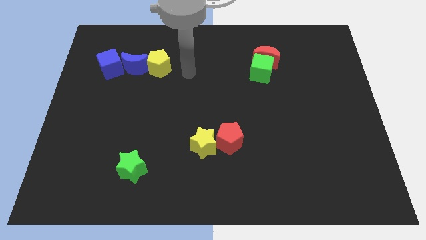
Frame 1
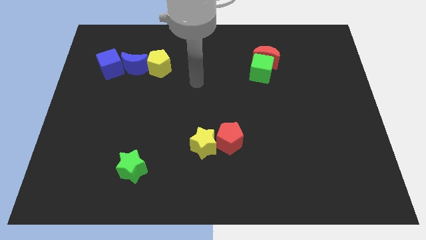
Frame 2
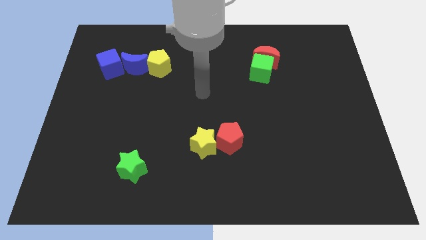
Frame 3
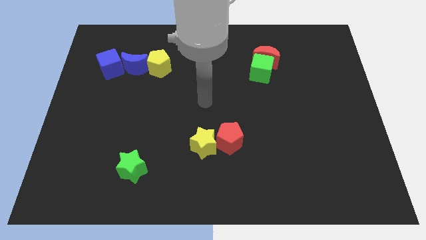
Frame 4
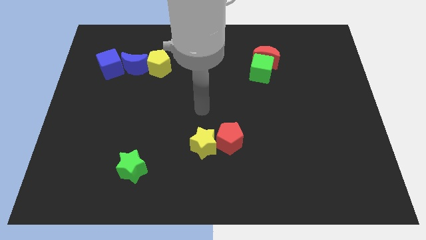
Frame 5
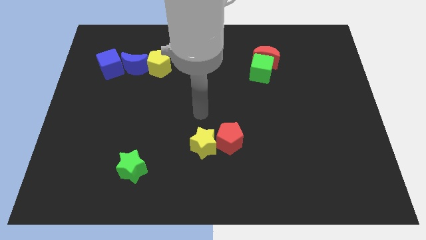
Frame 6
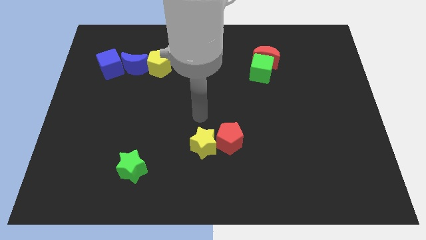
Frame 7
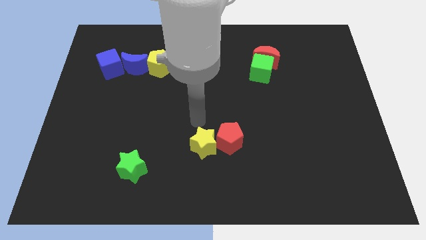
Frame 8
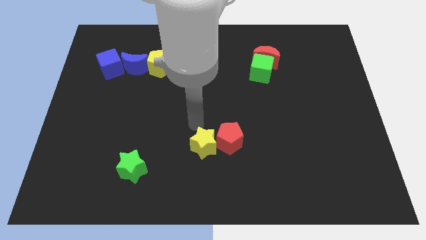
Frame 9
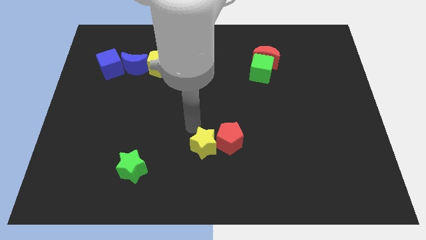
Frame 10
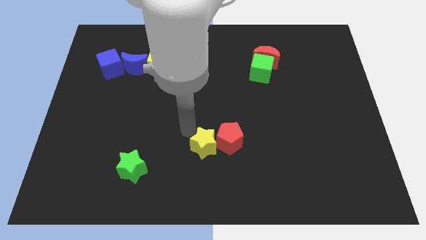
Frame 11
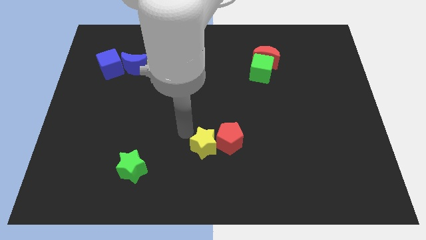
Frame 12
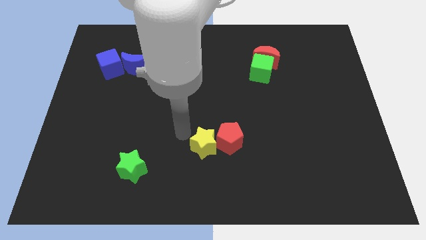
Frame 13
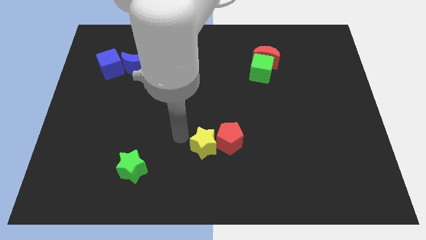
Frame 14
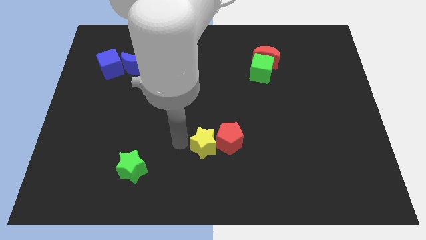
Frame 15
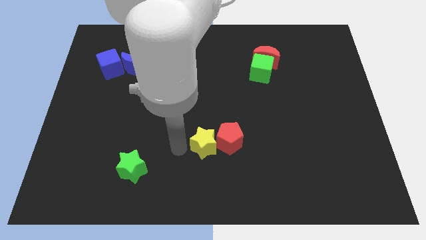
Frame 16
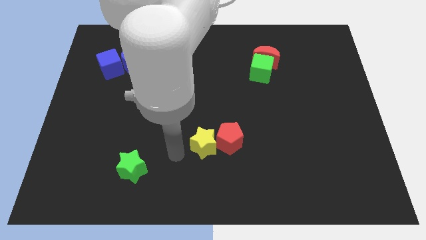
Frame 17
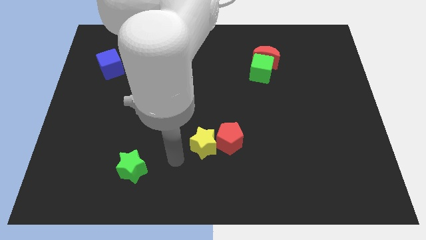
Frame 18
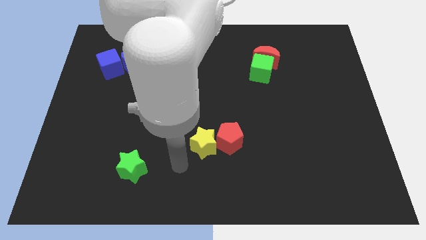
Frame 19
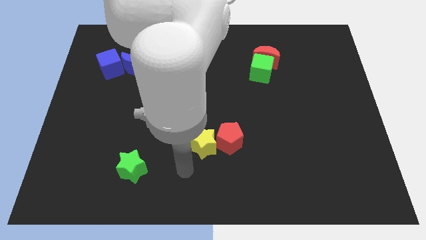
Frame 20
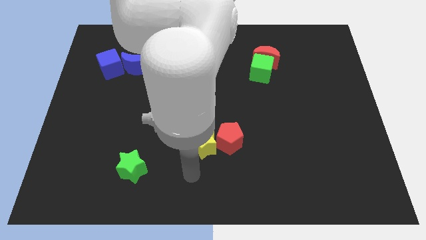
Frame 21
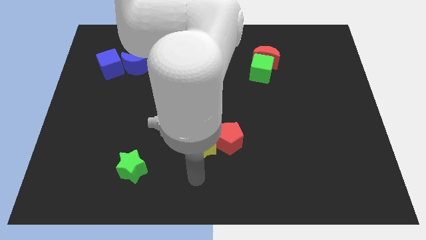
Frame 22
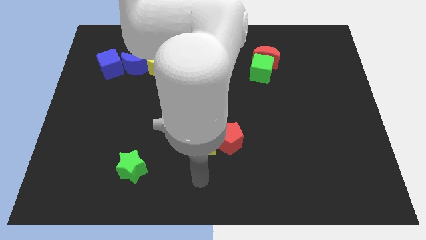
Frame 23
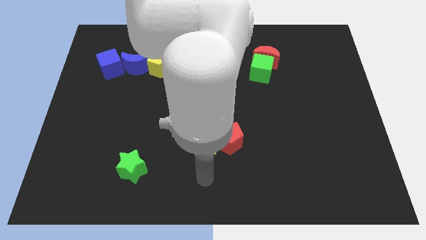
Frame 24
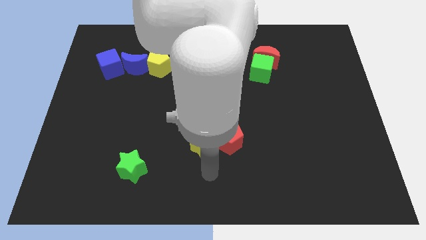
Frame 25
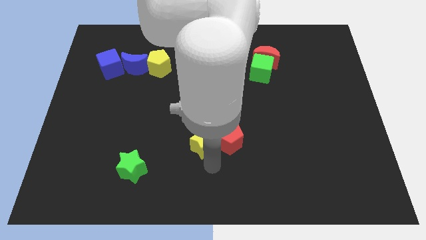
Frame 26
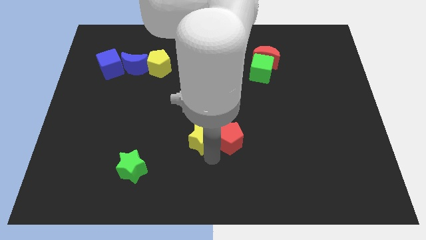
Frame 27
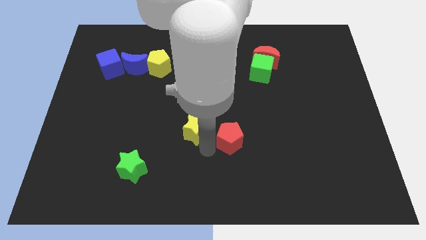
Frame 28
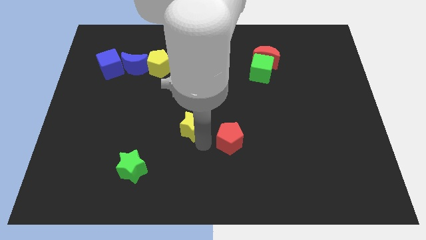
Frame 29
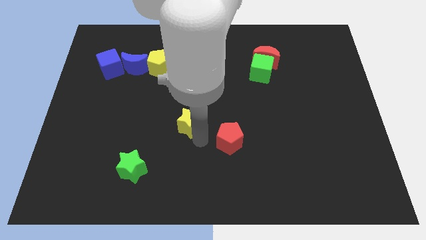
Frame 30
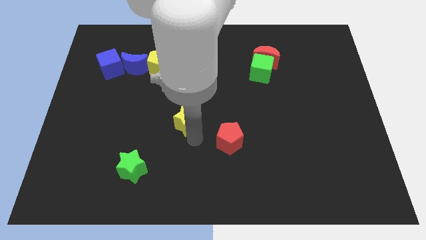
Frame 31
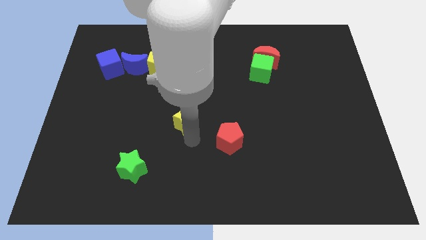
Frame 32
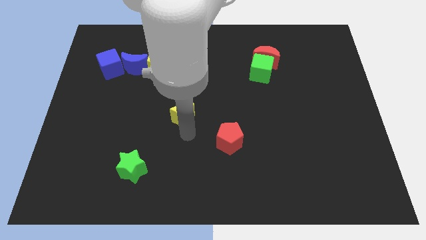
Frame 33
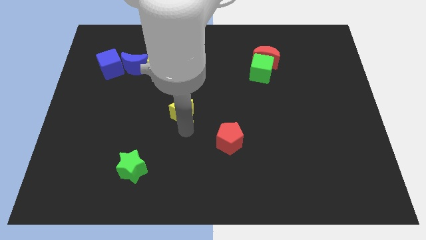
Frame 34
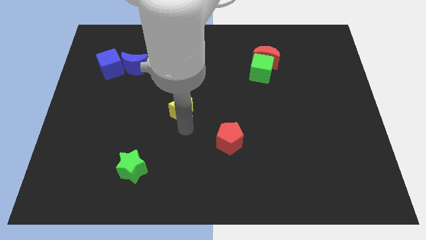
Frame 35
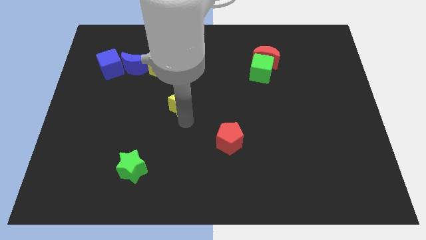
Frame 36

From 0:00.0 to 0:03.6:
separate the yellow star from the red pentagon

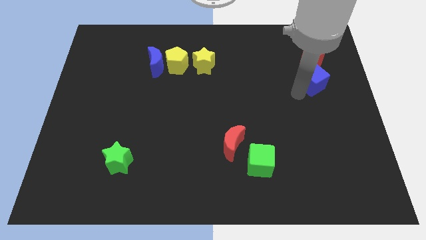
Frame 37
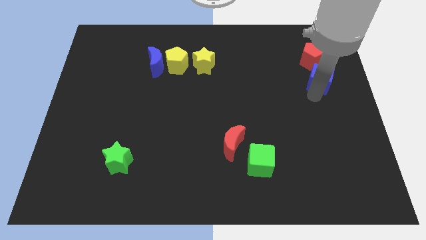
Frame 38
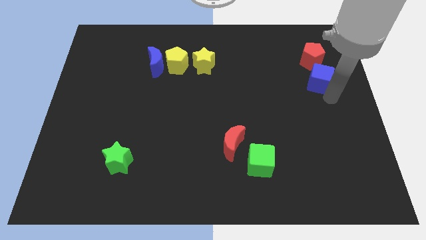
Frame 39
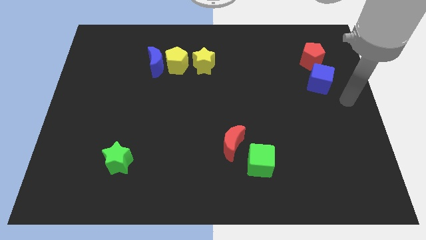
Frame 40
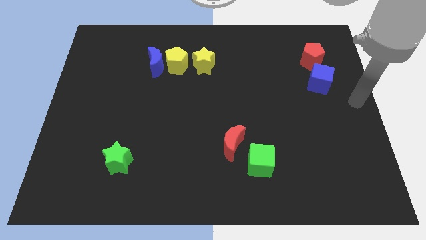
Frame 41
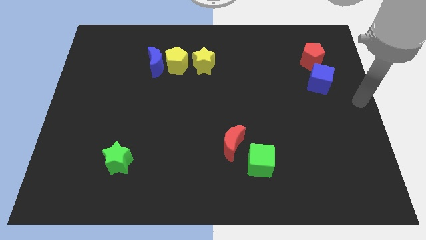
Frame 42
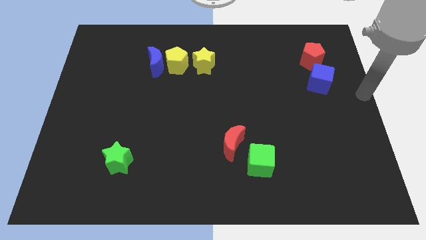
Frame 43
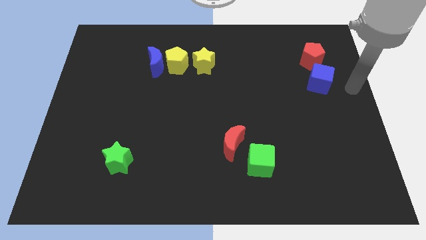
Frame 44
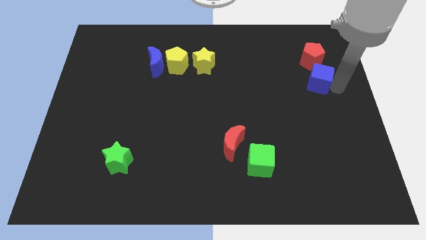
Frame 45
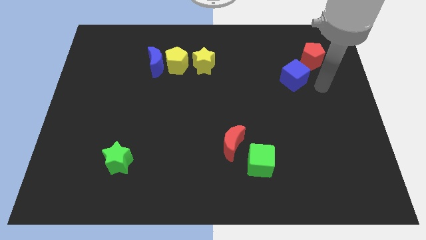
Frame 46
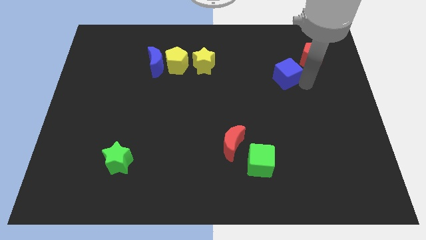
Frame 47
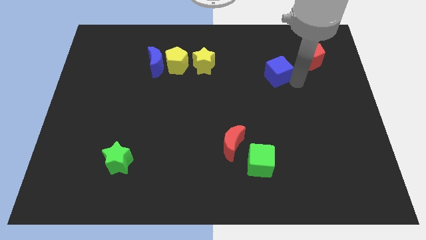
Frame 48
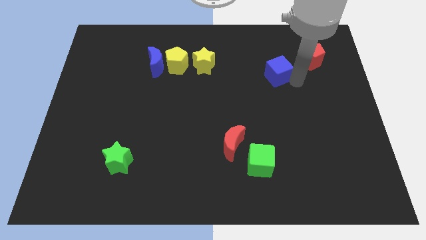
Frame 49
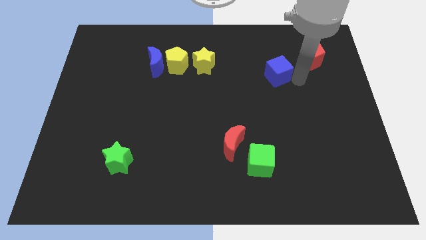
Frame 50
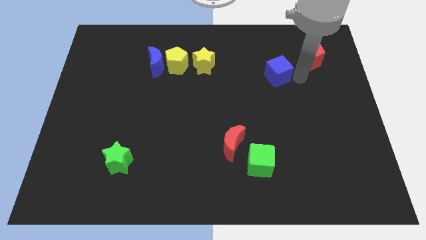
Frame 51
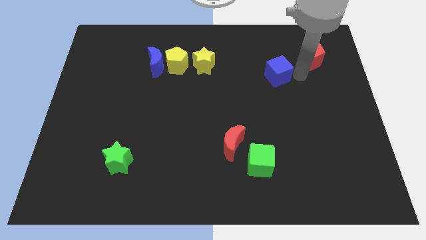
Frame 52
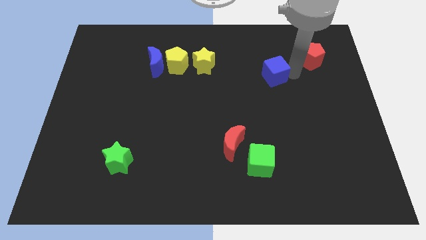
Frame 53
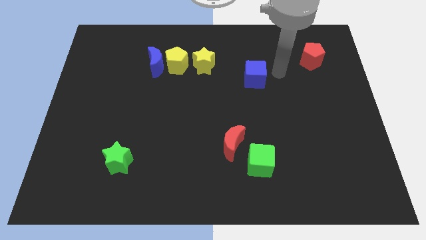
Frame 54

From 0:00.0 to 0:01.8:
drag the blue cube slightly to the left

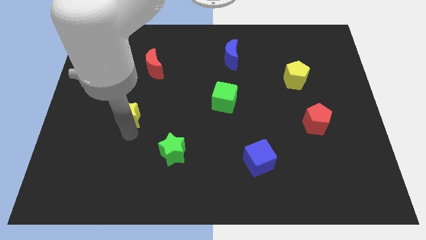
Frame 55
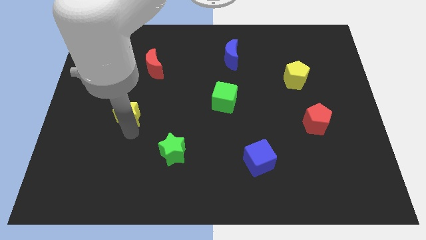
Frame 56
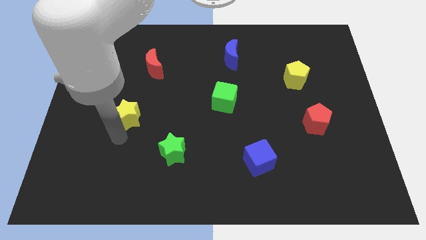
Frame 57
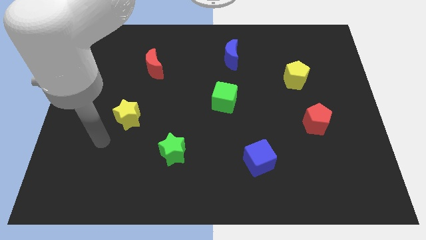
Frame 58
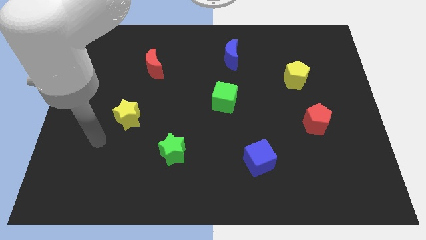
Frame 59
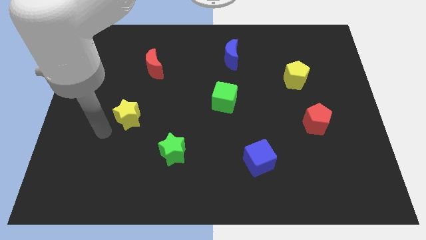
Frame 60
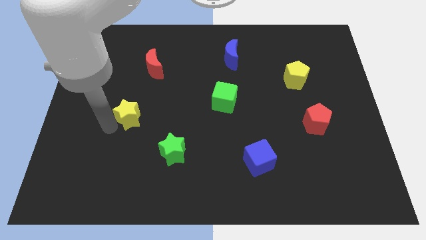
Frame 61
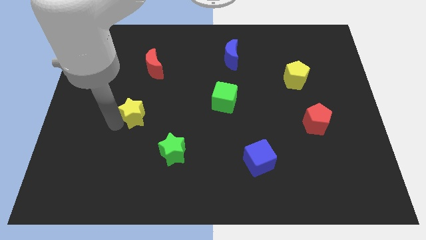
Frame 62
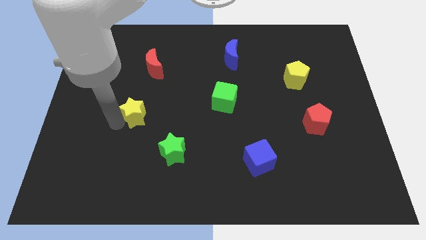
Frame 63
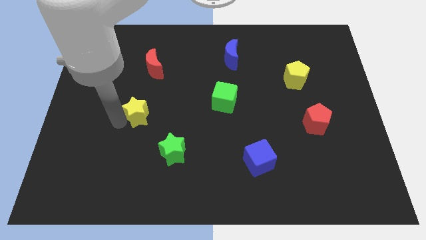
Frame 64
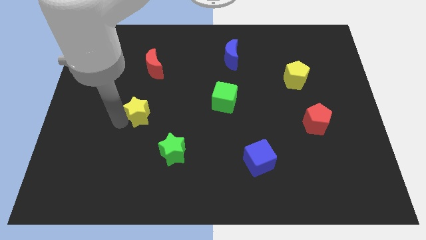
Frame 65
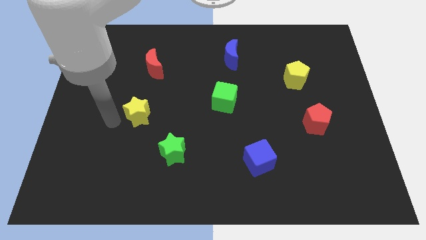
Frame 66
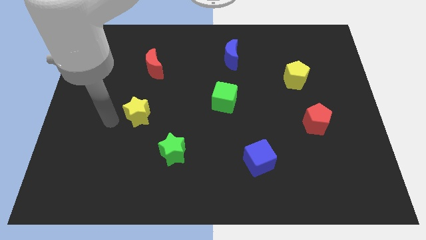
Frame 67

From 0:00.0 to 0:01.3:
slightly move the yellow star towards the center of the green star and the red moon

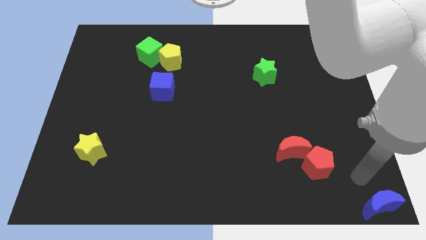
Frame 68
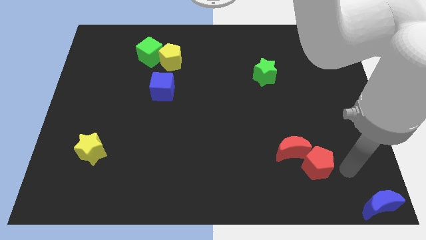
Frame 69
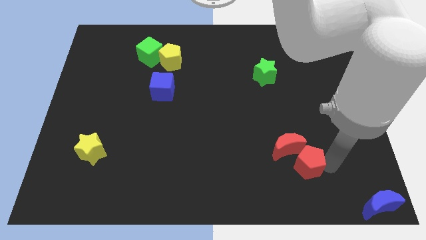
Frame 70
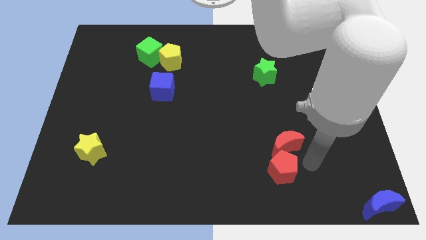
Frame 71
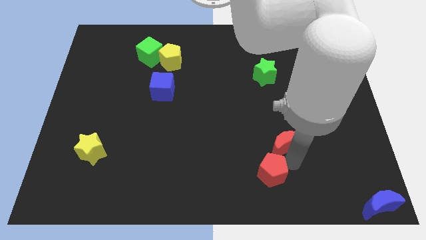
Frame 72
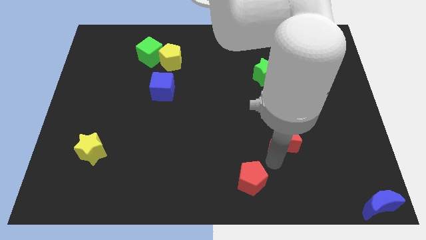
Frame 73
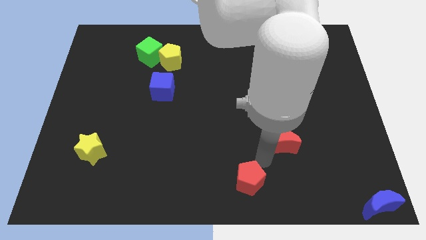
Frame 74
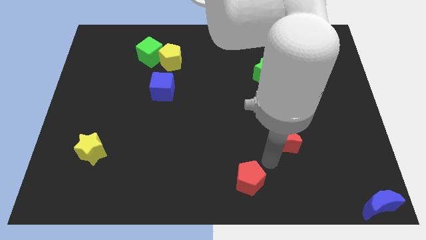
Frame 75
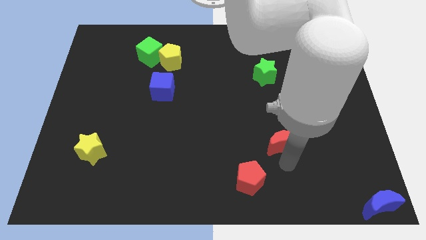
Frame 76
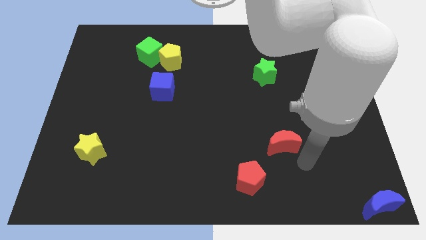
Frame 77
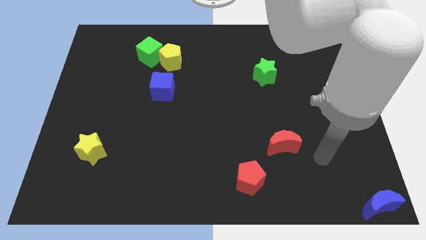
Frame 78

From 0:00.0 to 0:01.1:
separate the red pentagon and the red crescent

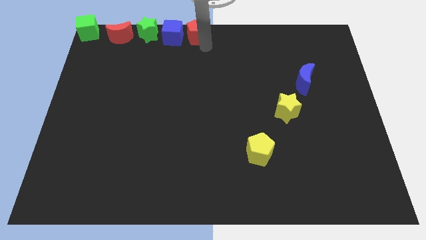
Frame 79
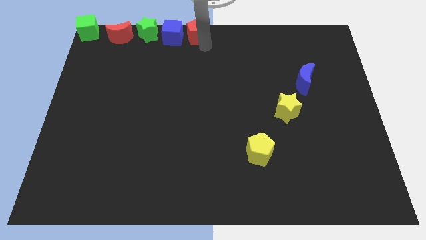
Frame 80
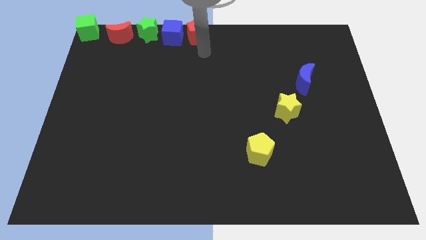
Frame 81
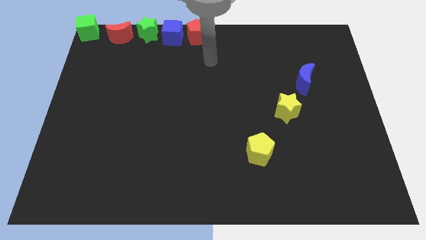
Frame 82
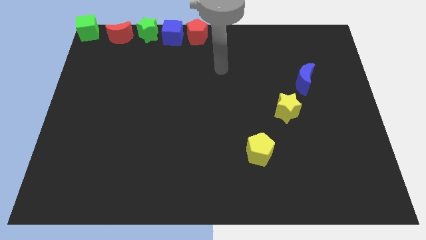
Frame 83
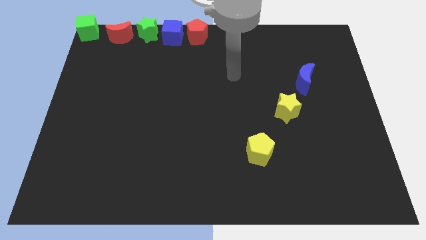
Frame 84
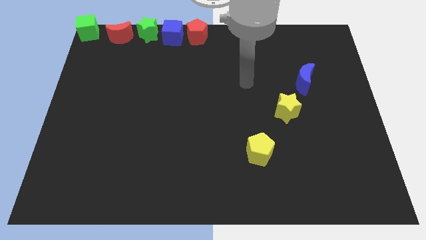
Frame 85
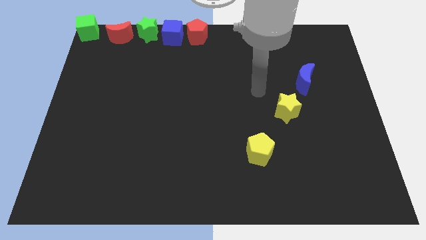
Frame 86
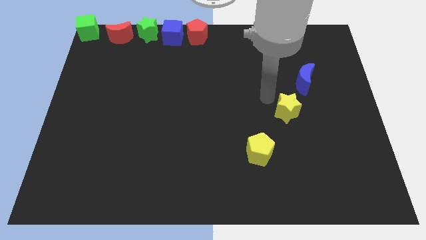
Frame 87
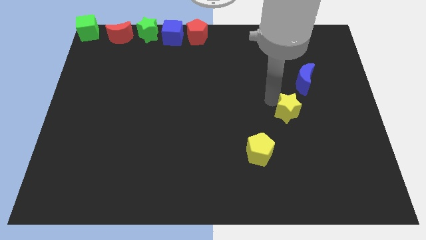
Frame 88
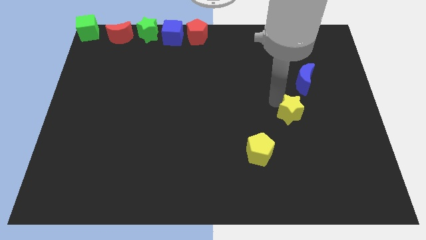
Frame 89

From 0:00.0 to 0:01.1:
tap the top left side of the yellow star
